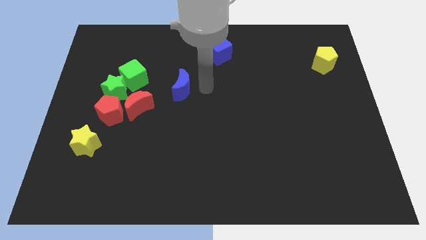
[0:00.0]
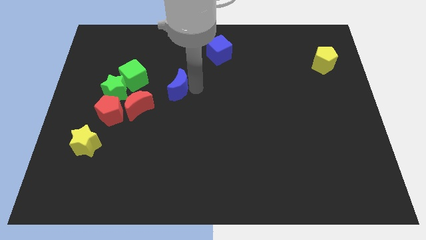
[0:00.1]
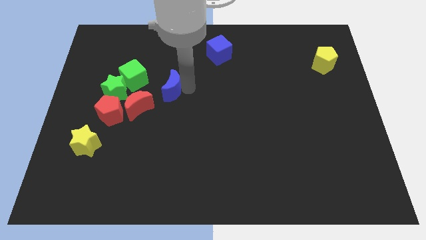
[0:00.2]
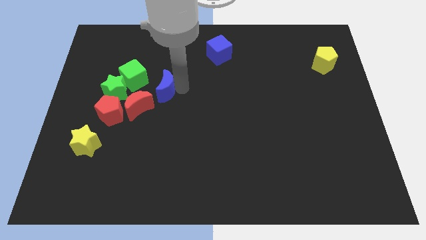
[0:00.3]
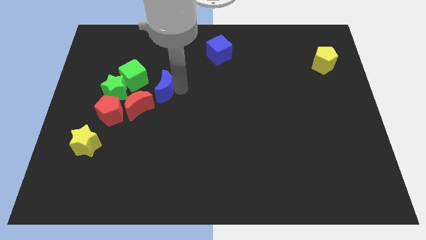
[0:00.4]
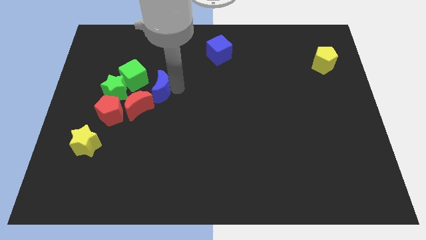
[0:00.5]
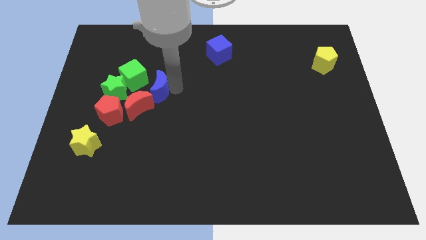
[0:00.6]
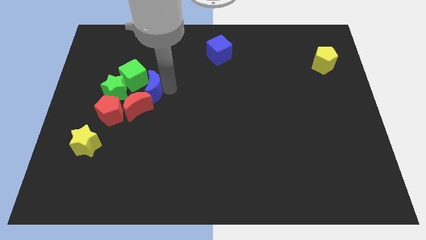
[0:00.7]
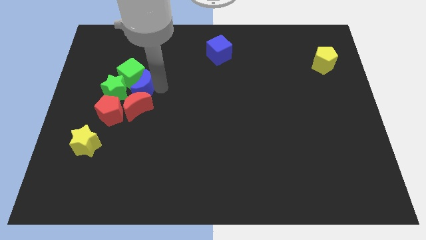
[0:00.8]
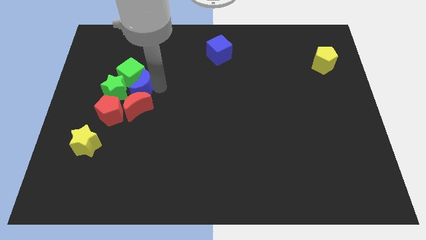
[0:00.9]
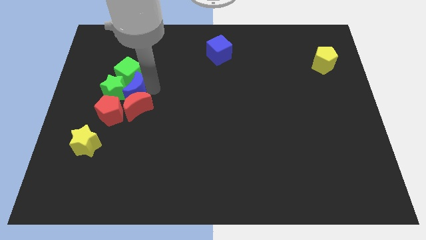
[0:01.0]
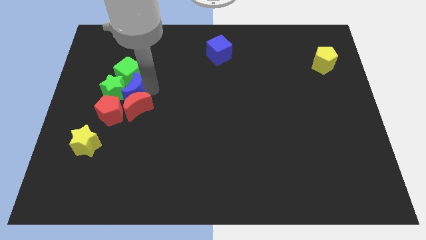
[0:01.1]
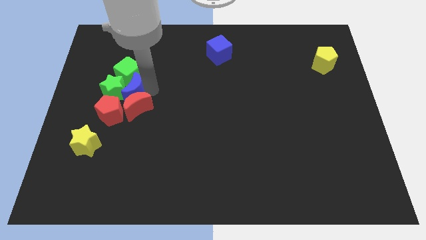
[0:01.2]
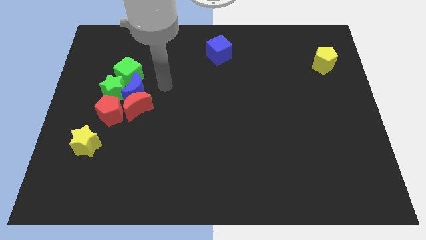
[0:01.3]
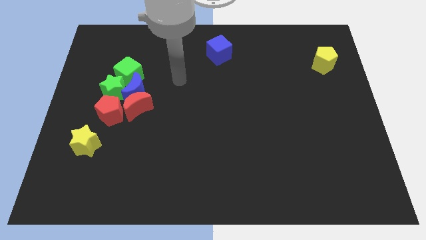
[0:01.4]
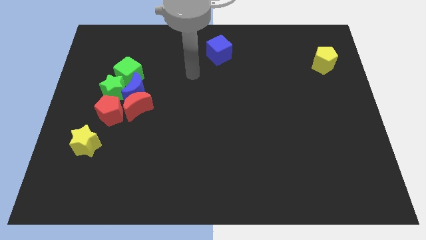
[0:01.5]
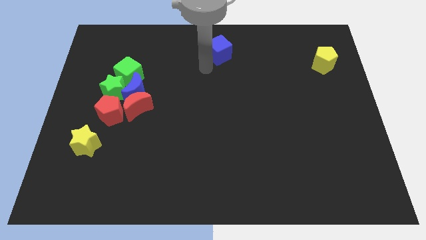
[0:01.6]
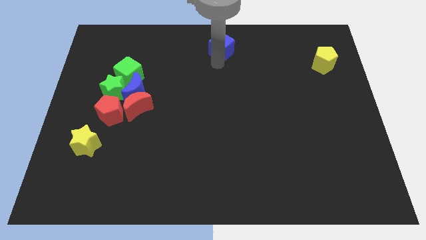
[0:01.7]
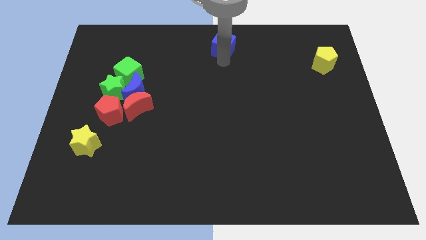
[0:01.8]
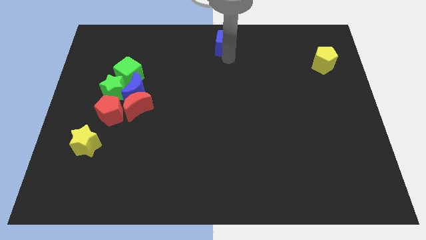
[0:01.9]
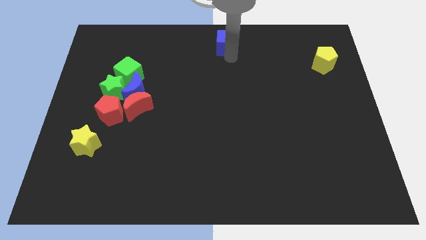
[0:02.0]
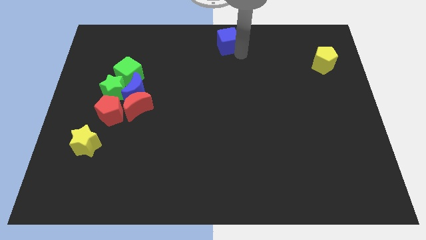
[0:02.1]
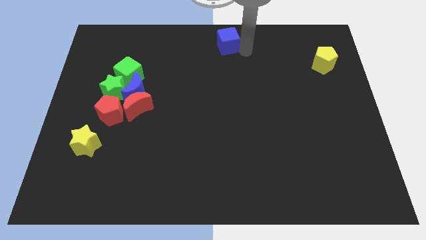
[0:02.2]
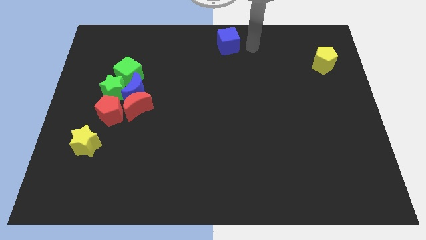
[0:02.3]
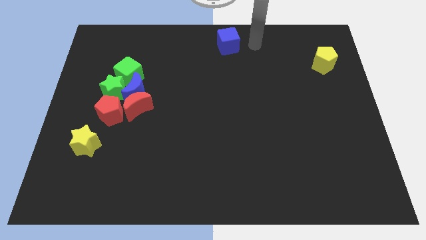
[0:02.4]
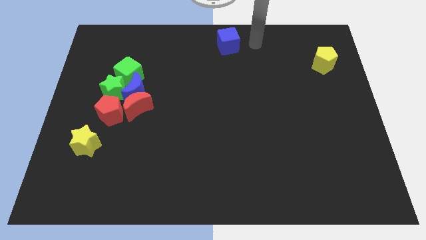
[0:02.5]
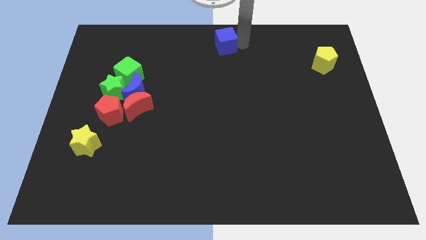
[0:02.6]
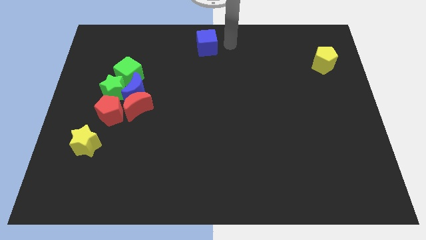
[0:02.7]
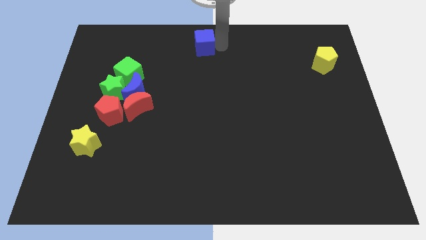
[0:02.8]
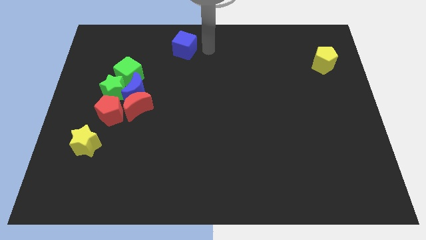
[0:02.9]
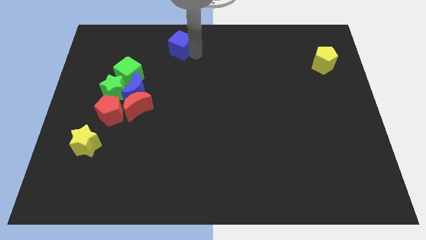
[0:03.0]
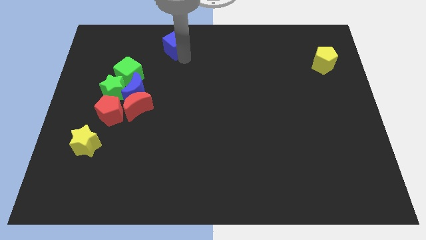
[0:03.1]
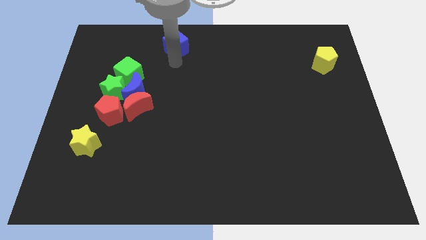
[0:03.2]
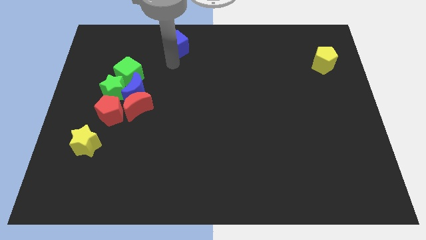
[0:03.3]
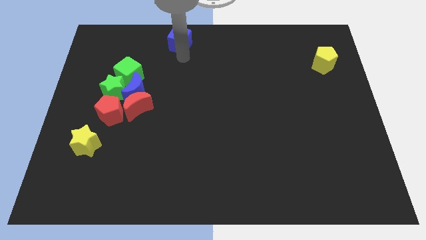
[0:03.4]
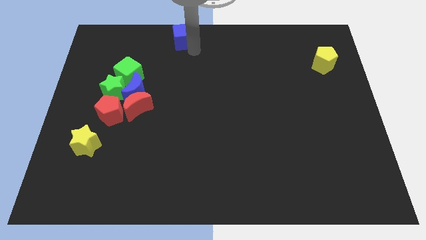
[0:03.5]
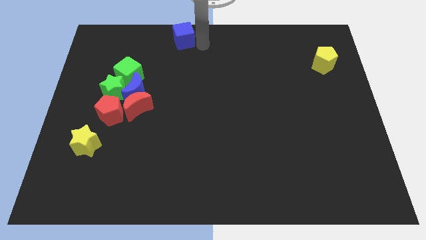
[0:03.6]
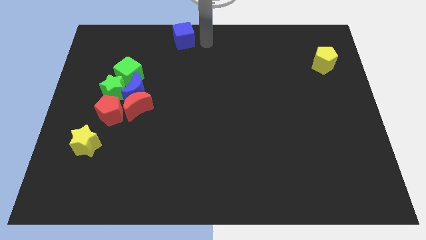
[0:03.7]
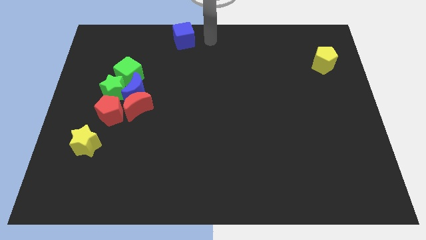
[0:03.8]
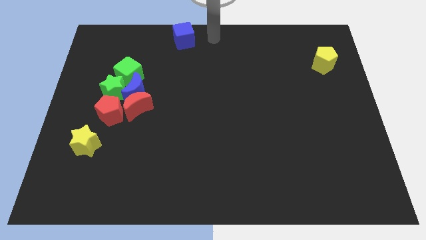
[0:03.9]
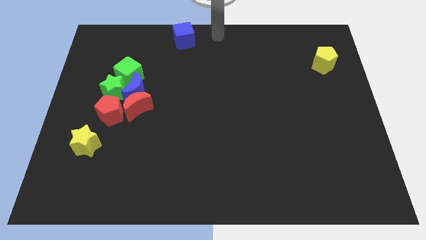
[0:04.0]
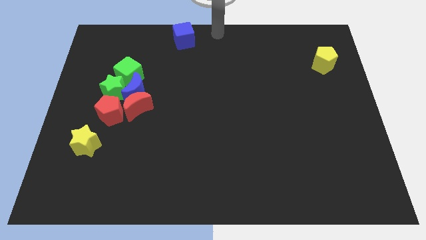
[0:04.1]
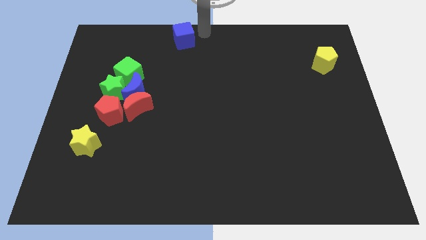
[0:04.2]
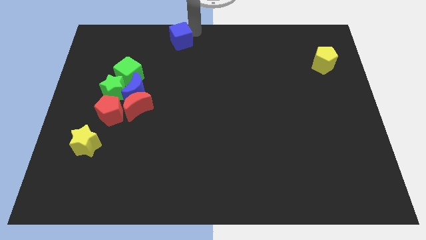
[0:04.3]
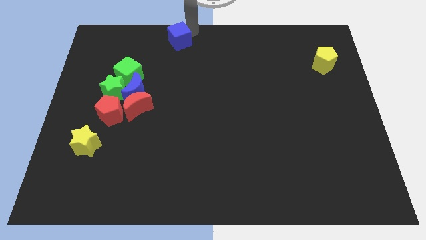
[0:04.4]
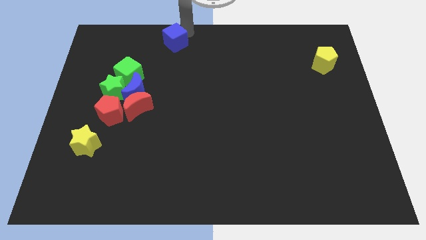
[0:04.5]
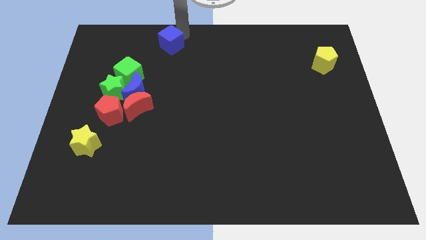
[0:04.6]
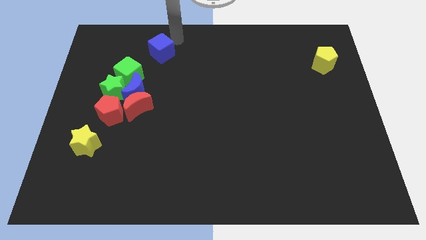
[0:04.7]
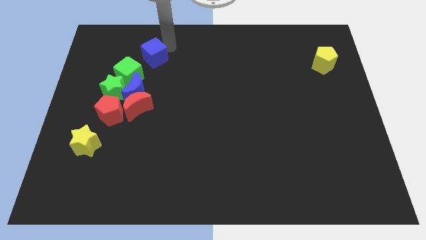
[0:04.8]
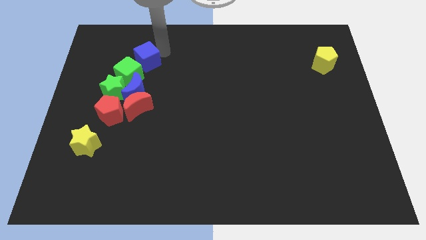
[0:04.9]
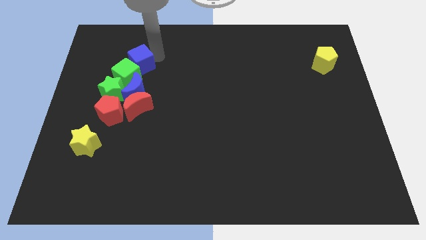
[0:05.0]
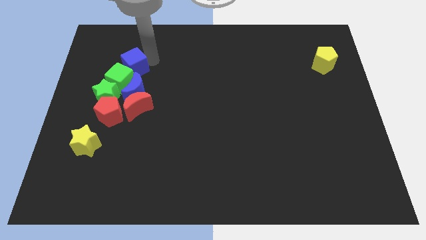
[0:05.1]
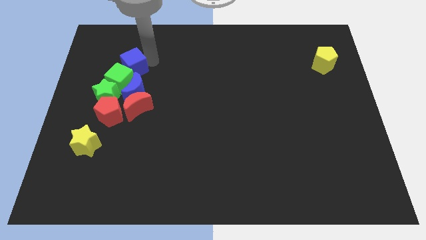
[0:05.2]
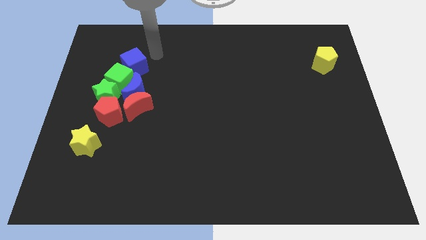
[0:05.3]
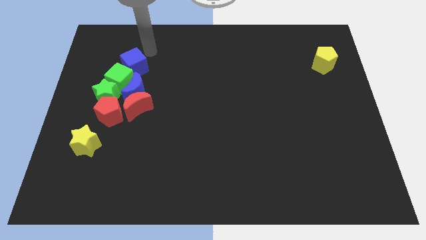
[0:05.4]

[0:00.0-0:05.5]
slide the blue blocks into the group of blocks

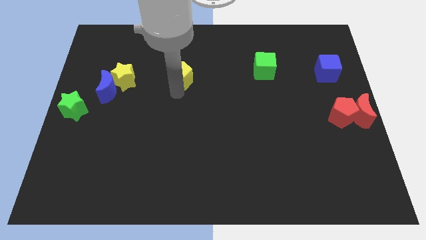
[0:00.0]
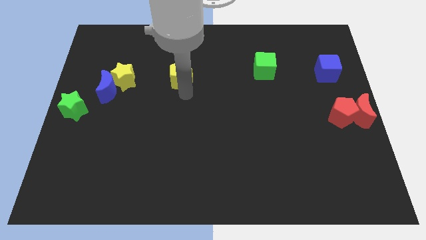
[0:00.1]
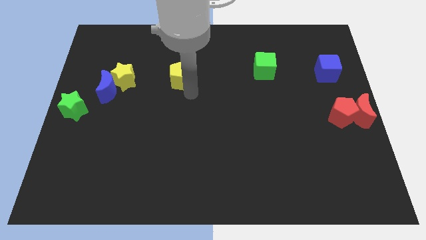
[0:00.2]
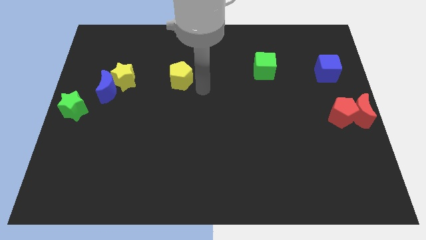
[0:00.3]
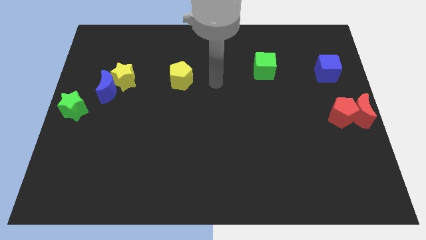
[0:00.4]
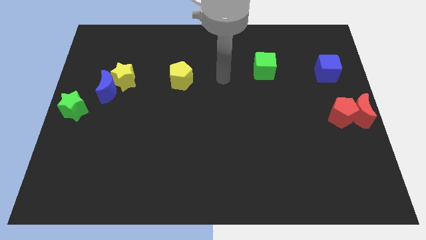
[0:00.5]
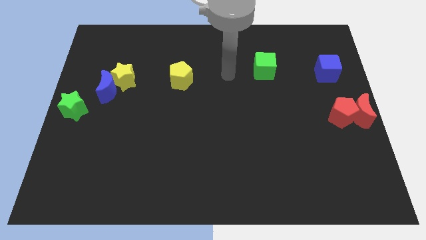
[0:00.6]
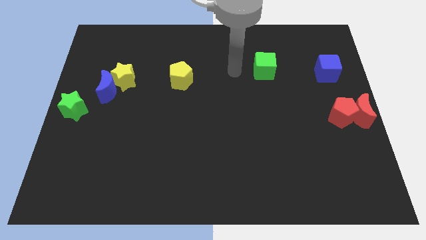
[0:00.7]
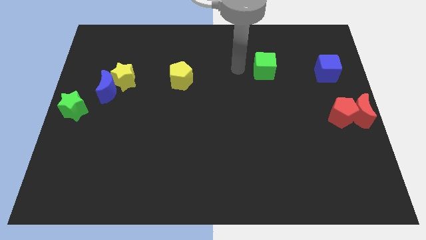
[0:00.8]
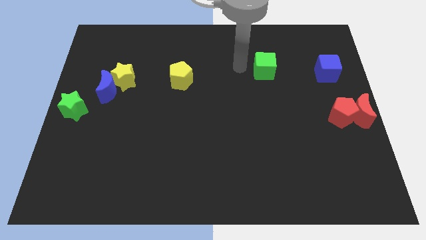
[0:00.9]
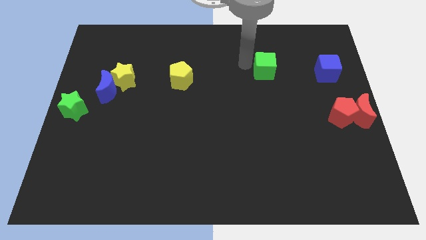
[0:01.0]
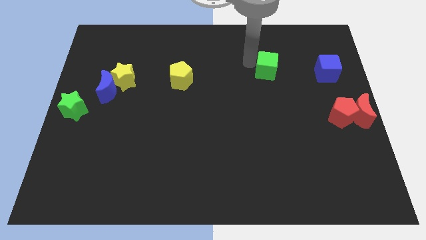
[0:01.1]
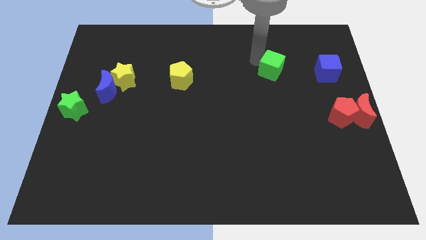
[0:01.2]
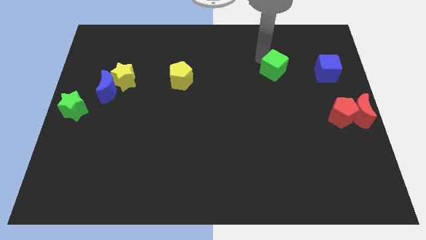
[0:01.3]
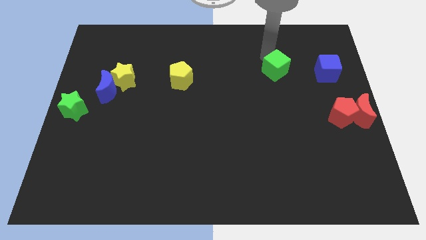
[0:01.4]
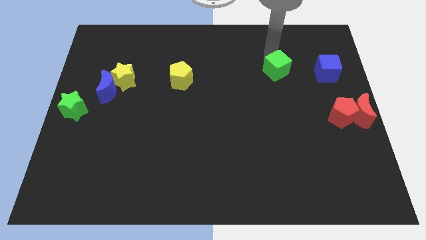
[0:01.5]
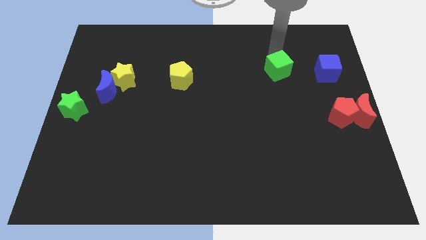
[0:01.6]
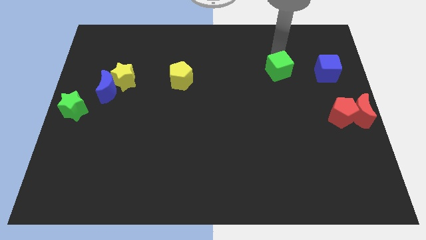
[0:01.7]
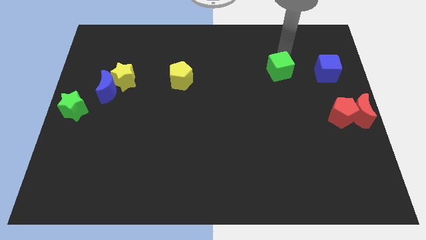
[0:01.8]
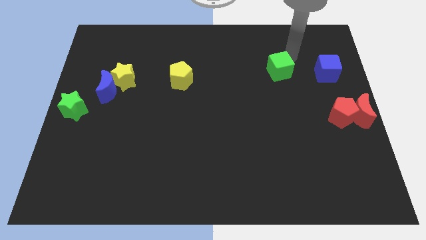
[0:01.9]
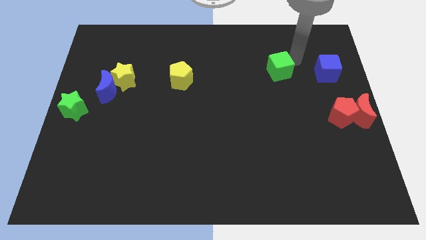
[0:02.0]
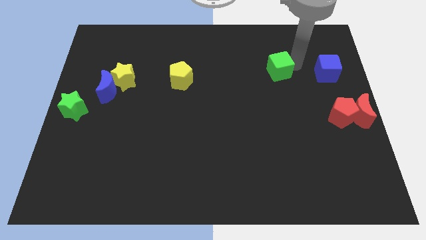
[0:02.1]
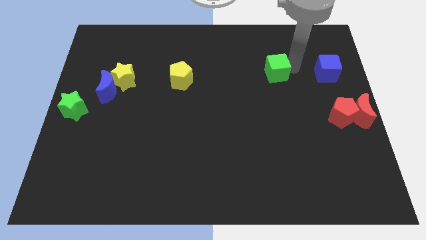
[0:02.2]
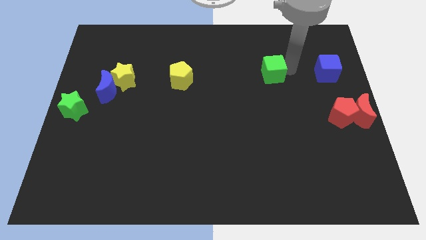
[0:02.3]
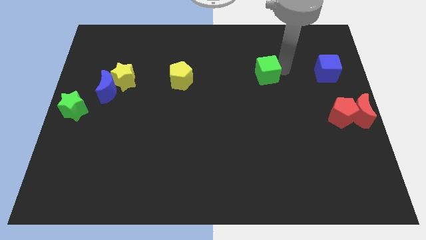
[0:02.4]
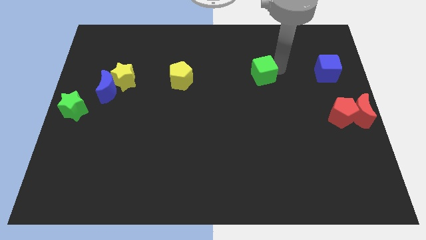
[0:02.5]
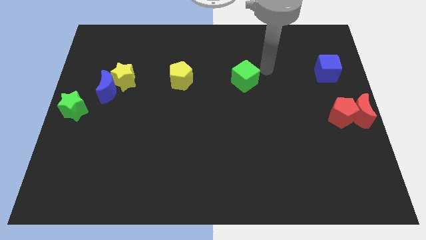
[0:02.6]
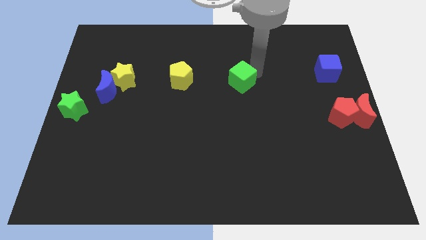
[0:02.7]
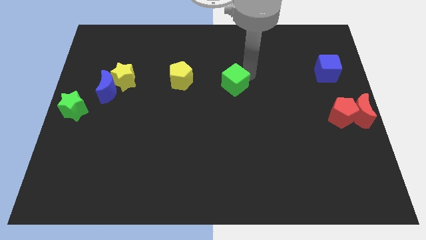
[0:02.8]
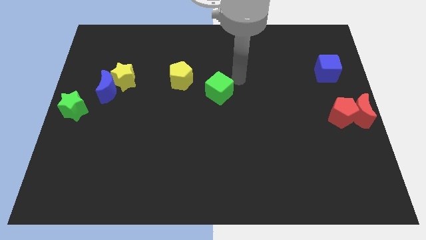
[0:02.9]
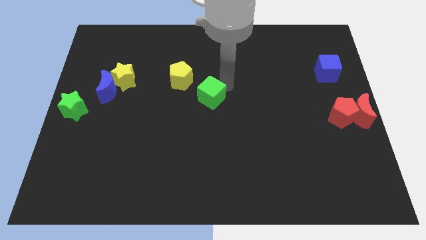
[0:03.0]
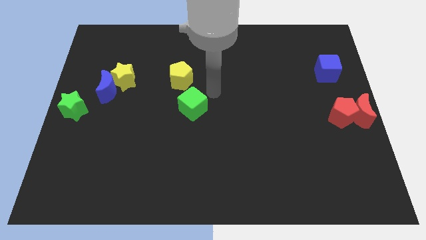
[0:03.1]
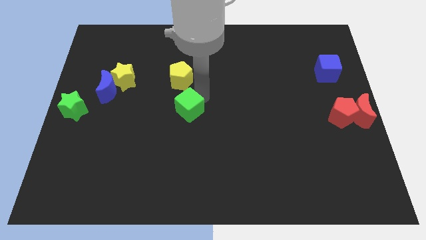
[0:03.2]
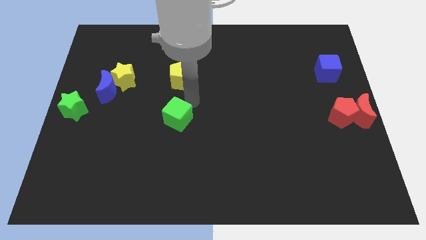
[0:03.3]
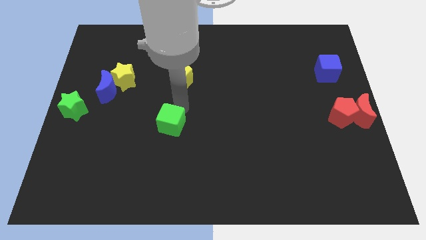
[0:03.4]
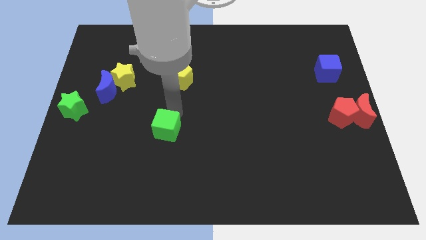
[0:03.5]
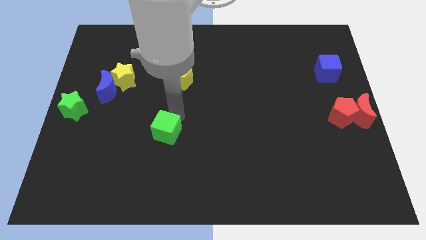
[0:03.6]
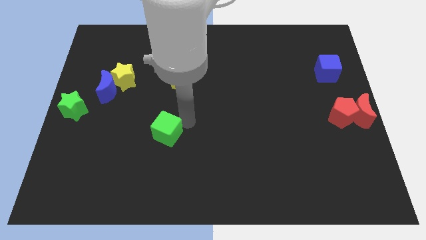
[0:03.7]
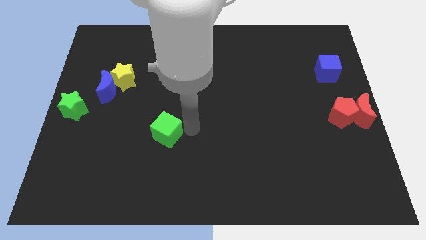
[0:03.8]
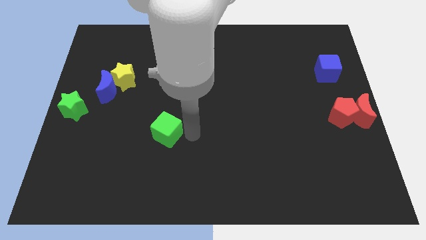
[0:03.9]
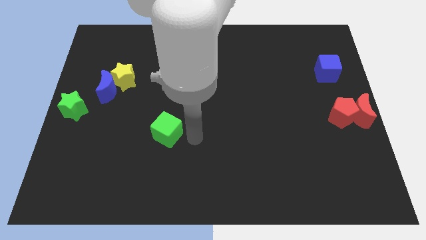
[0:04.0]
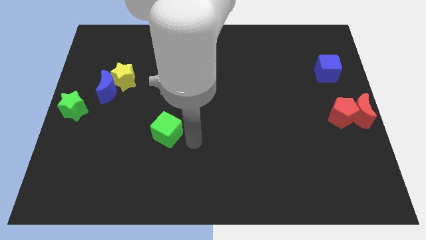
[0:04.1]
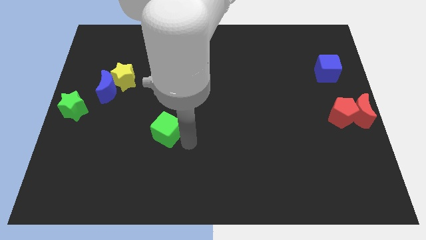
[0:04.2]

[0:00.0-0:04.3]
place green cube to the bottom of the yellow pentagon
